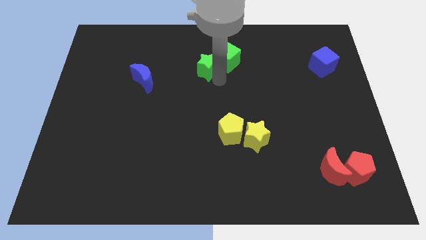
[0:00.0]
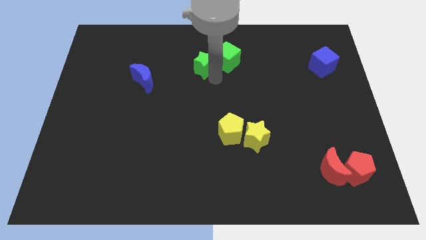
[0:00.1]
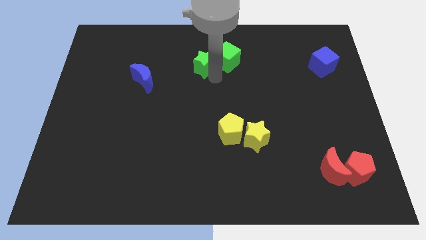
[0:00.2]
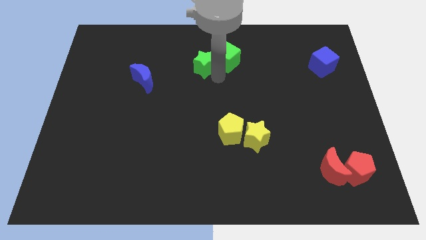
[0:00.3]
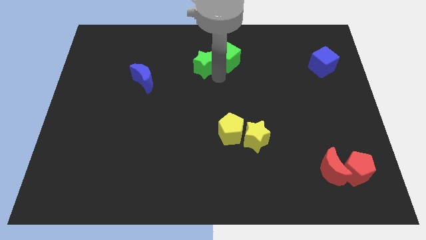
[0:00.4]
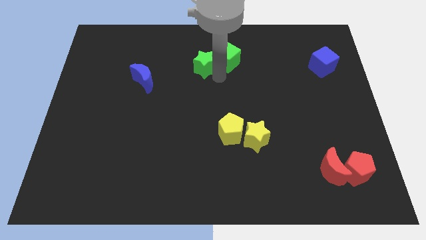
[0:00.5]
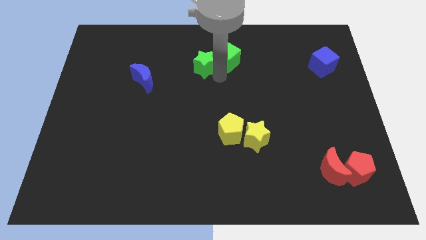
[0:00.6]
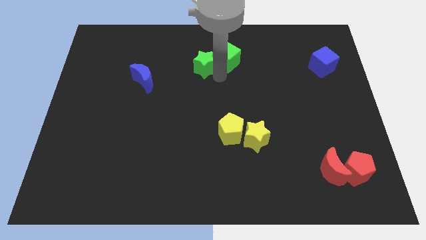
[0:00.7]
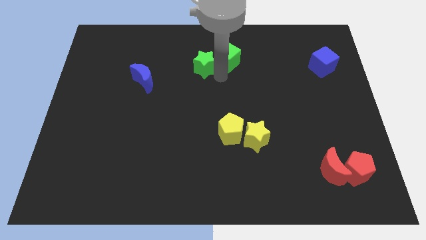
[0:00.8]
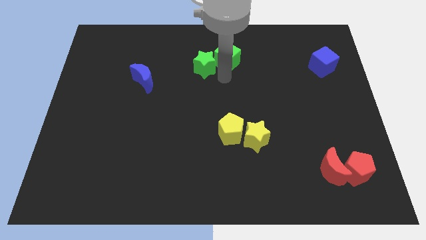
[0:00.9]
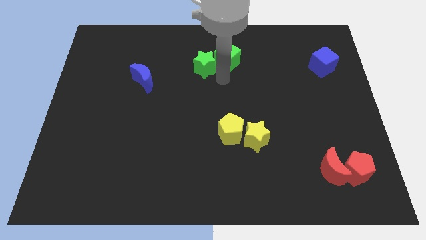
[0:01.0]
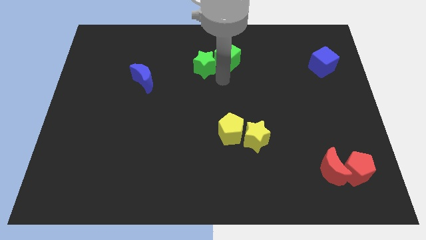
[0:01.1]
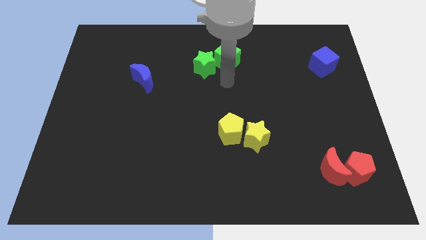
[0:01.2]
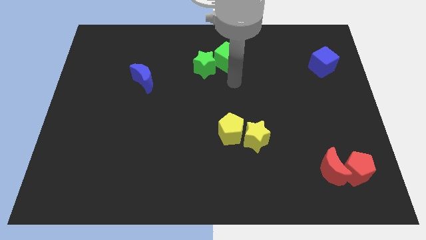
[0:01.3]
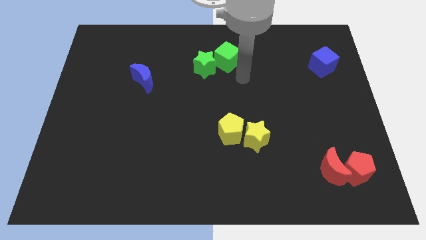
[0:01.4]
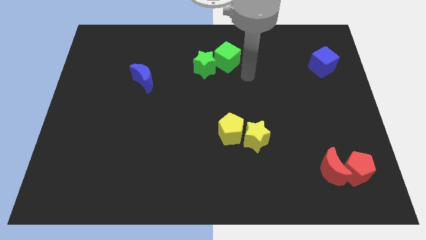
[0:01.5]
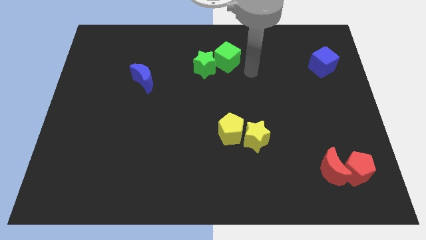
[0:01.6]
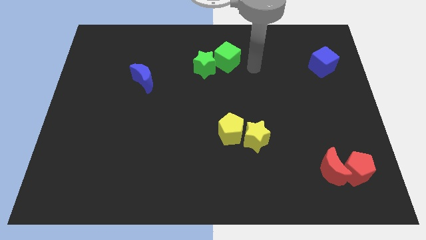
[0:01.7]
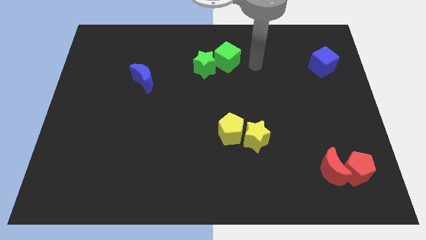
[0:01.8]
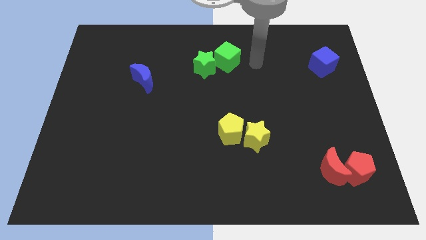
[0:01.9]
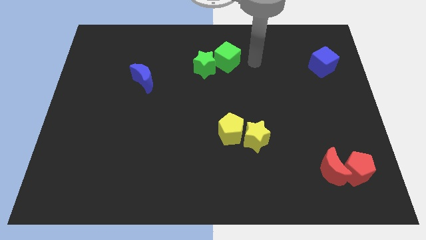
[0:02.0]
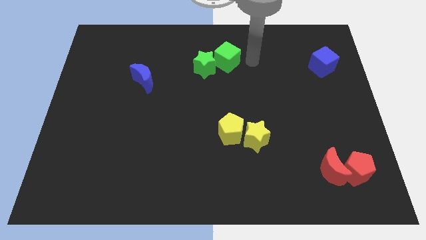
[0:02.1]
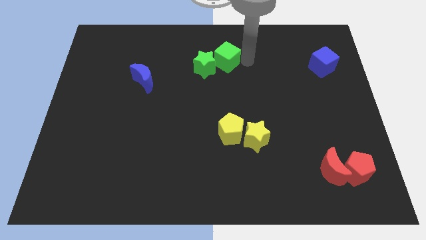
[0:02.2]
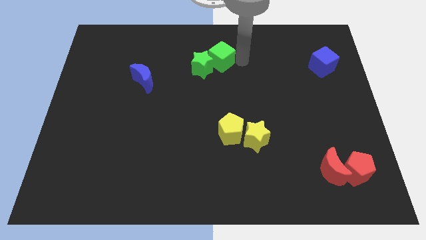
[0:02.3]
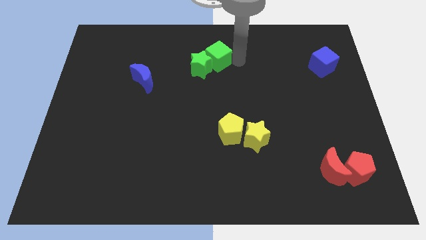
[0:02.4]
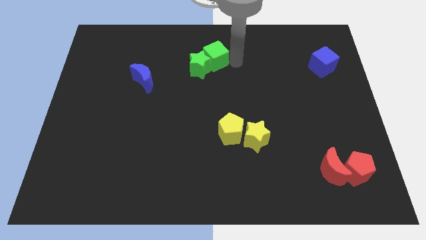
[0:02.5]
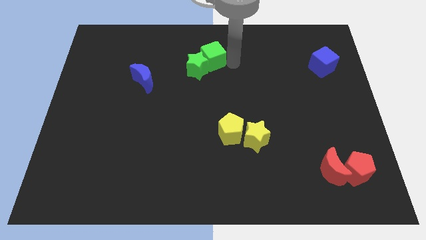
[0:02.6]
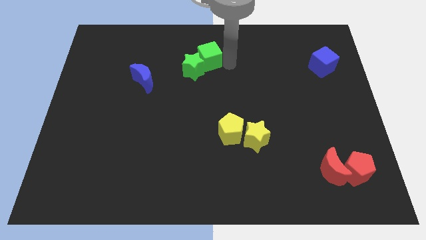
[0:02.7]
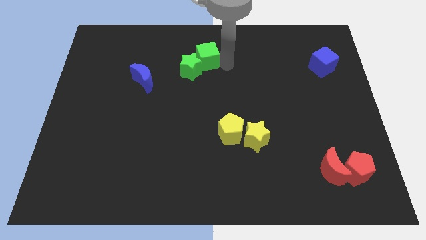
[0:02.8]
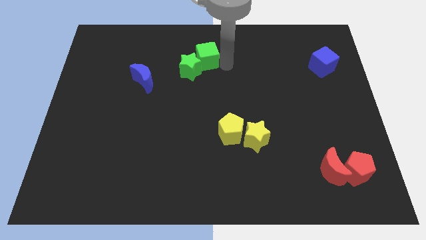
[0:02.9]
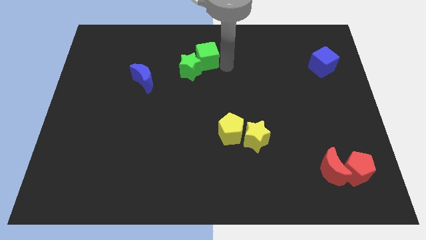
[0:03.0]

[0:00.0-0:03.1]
slide both the green blocks towards the blue crescent

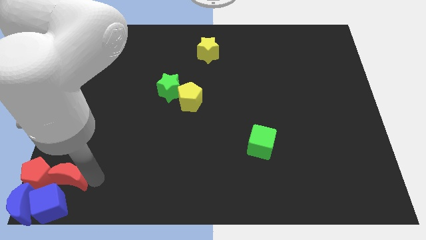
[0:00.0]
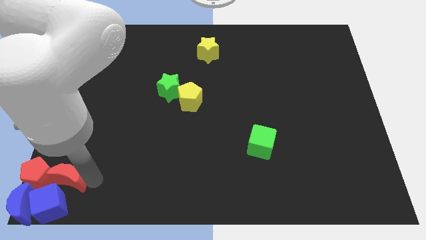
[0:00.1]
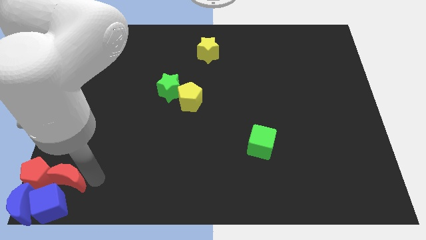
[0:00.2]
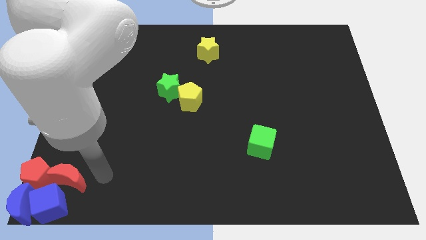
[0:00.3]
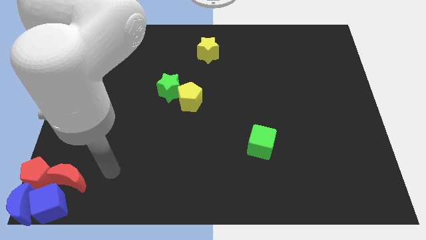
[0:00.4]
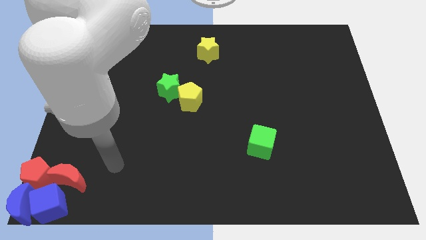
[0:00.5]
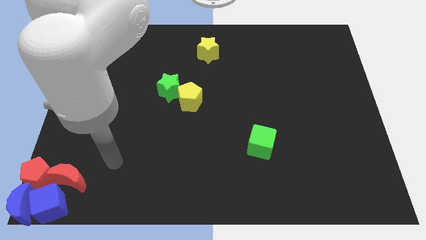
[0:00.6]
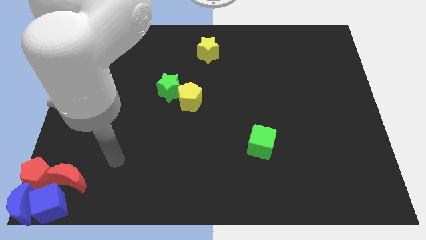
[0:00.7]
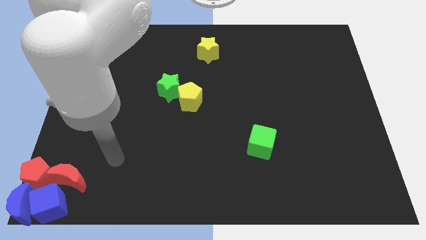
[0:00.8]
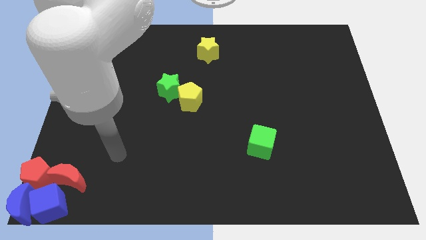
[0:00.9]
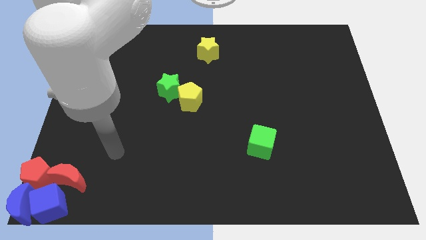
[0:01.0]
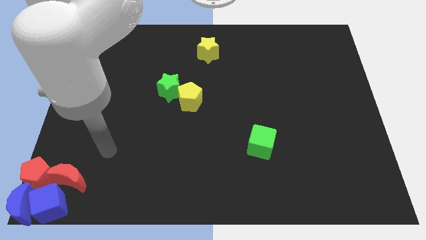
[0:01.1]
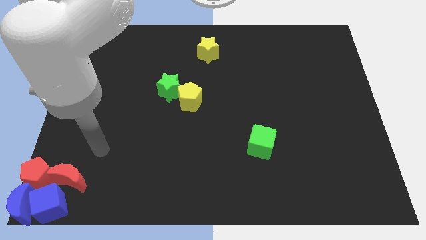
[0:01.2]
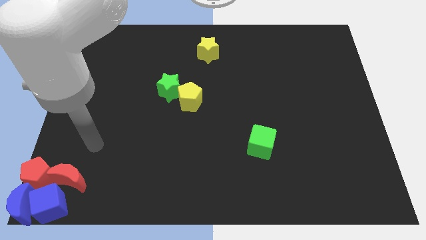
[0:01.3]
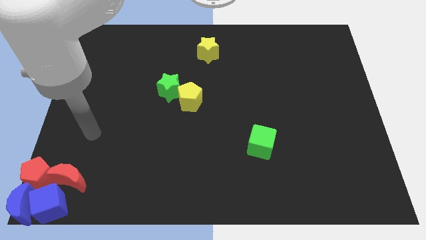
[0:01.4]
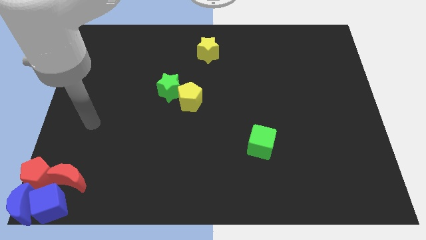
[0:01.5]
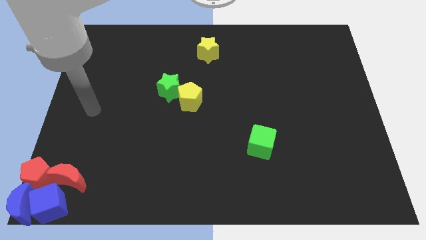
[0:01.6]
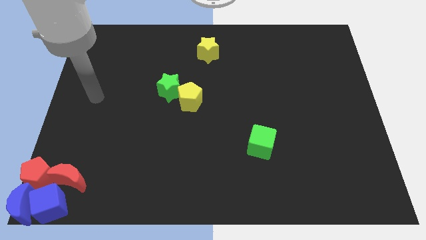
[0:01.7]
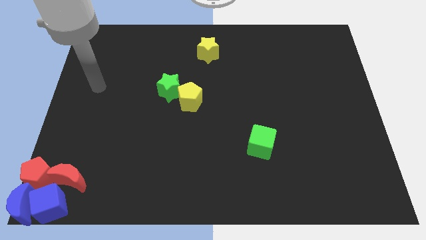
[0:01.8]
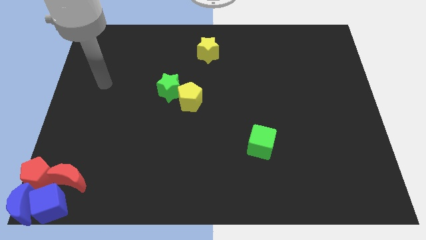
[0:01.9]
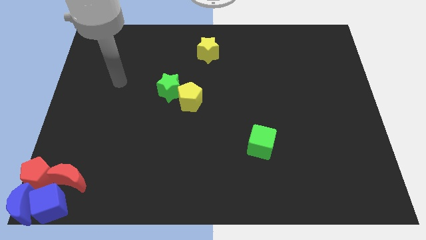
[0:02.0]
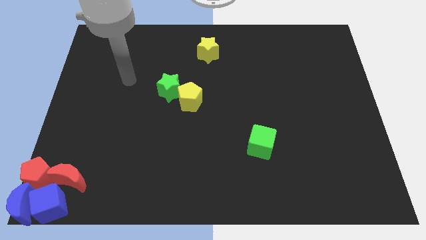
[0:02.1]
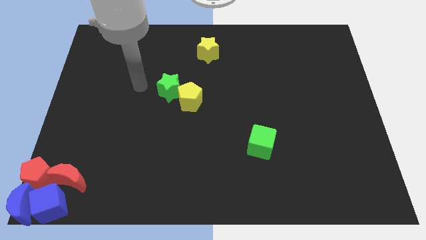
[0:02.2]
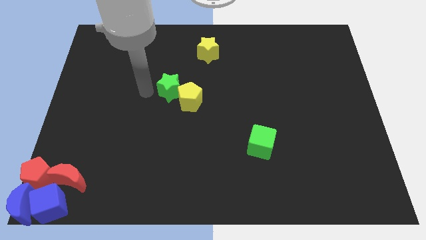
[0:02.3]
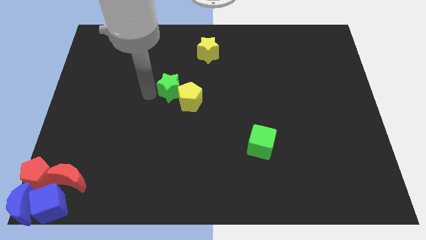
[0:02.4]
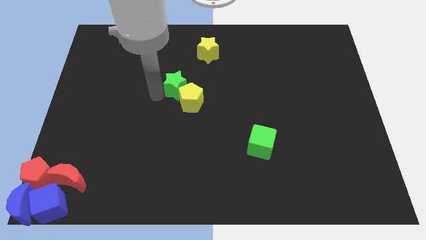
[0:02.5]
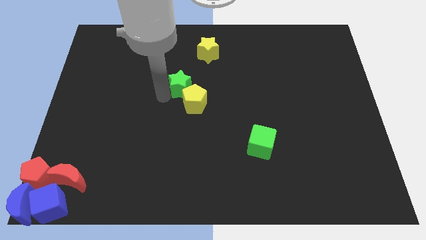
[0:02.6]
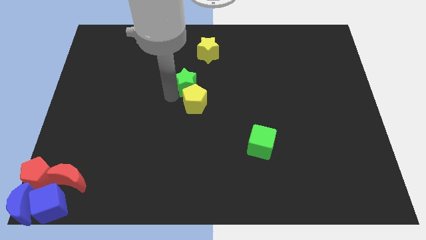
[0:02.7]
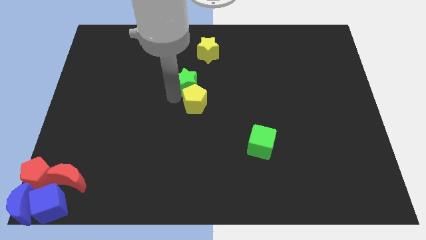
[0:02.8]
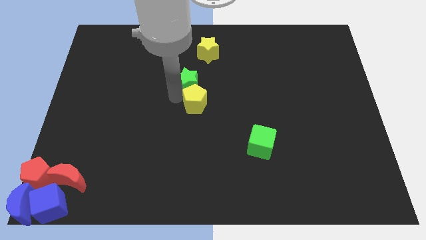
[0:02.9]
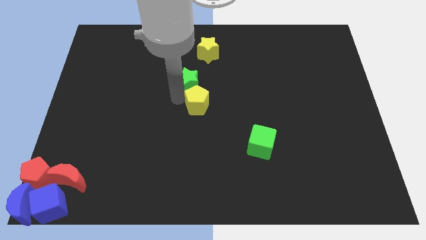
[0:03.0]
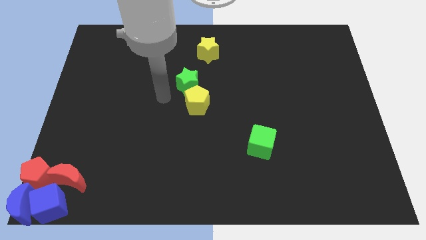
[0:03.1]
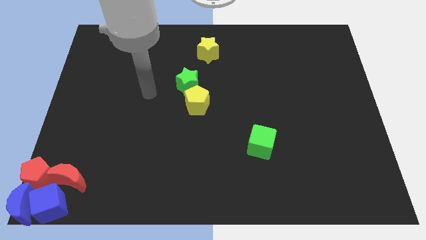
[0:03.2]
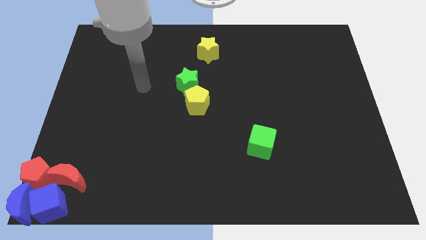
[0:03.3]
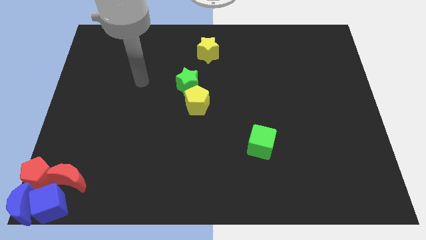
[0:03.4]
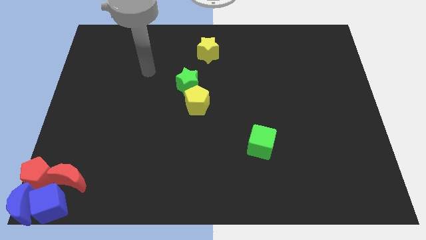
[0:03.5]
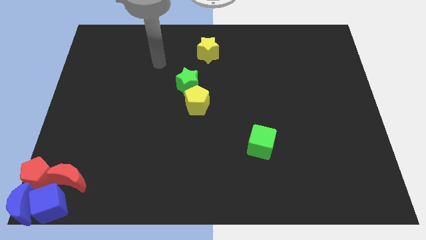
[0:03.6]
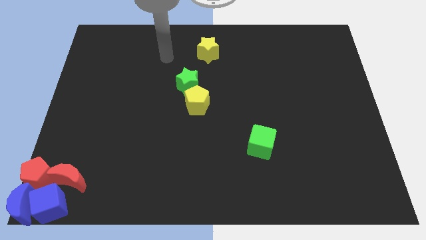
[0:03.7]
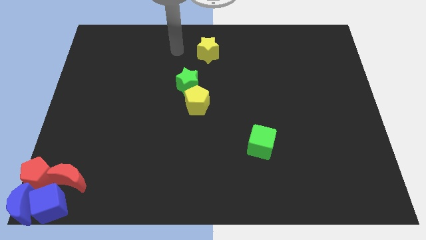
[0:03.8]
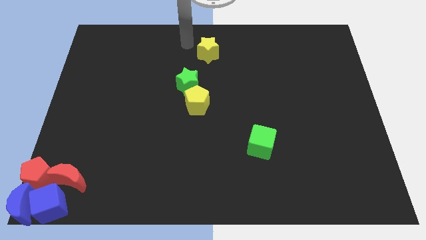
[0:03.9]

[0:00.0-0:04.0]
slightly push the green star into the yellow pentagon

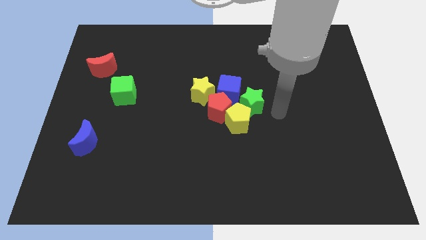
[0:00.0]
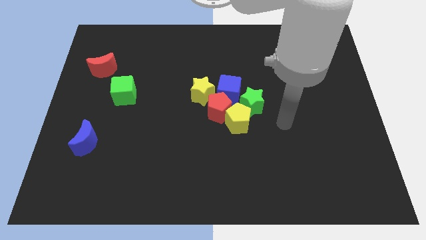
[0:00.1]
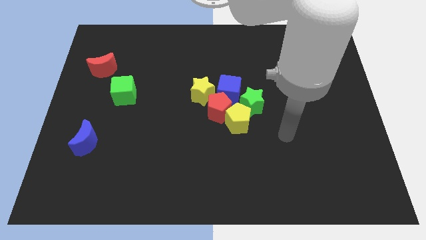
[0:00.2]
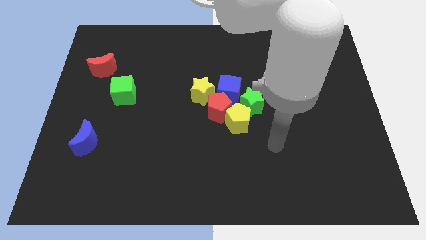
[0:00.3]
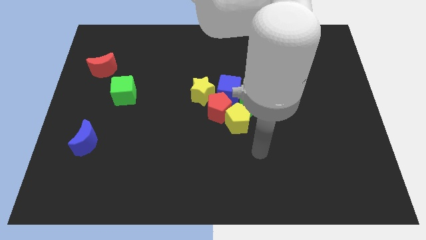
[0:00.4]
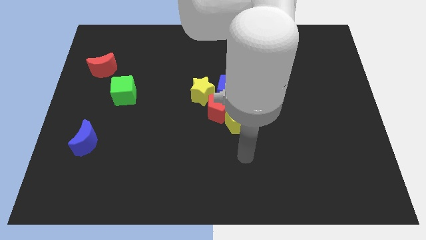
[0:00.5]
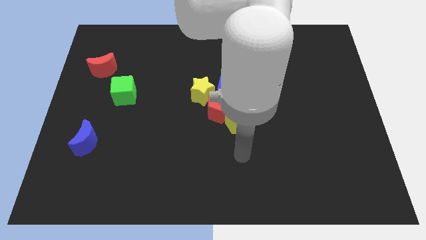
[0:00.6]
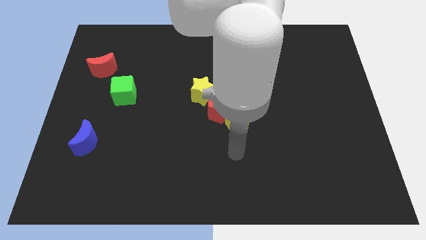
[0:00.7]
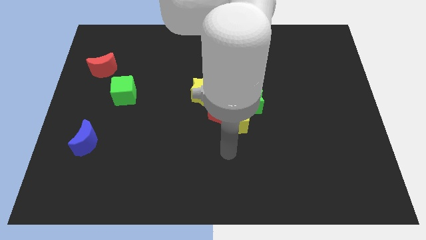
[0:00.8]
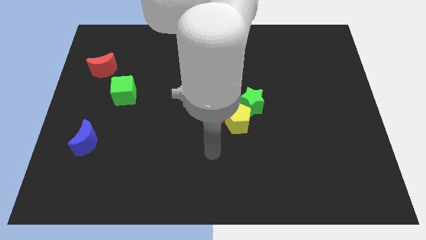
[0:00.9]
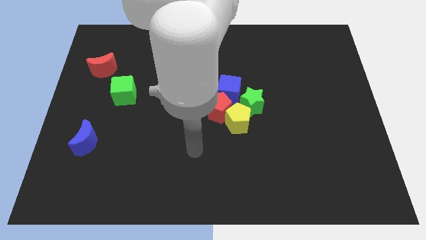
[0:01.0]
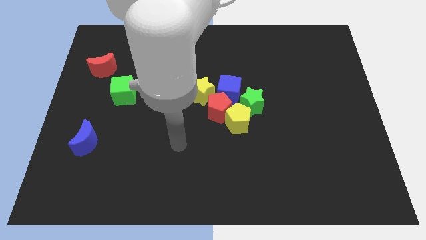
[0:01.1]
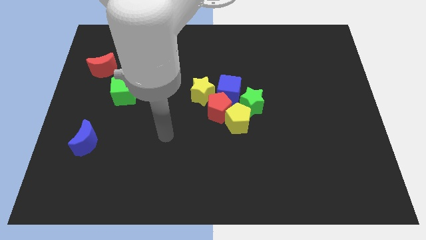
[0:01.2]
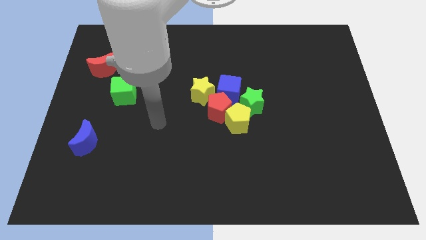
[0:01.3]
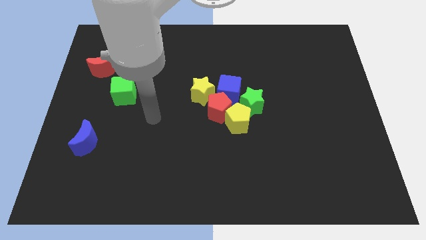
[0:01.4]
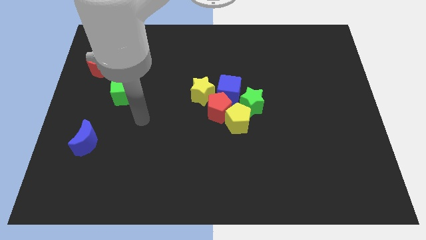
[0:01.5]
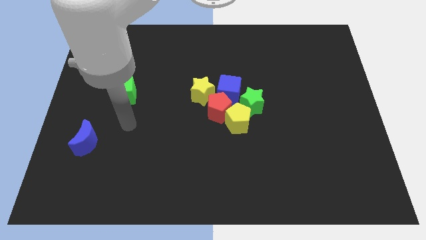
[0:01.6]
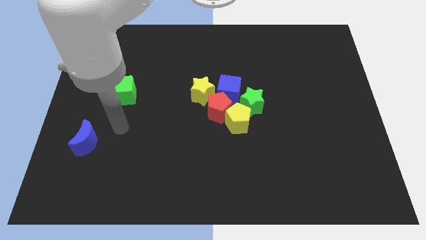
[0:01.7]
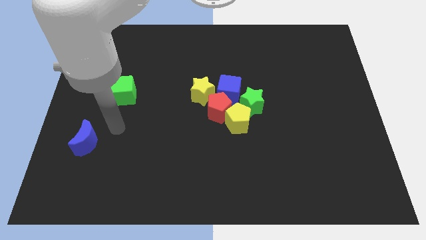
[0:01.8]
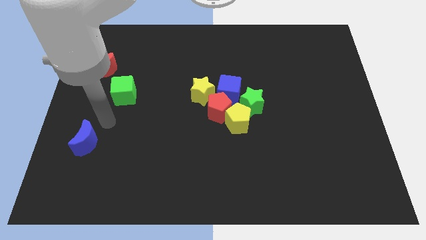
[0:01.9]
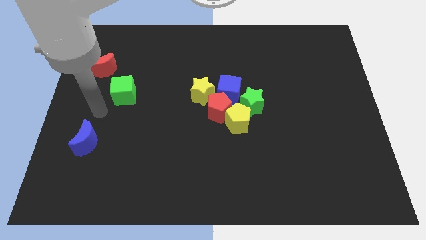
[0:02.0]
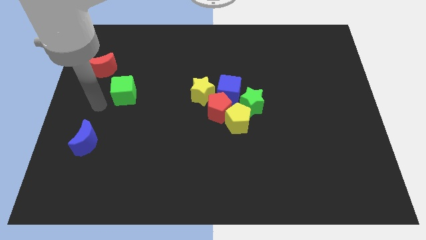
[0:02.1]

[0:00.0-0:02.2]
move your arm left to the green cube
